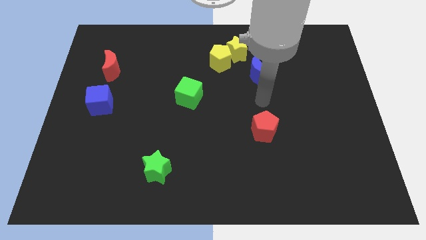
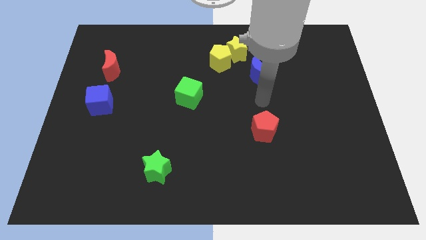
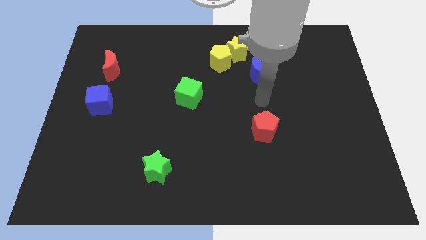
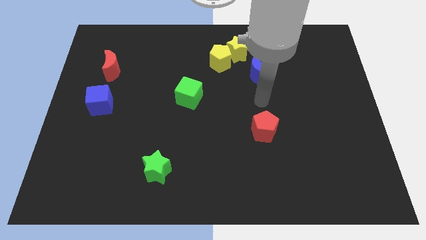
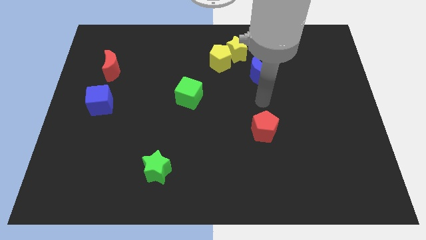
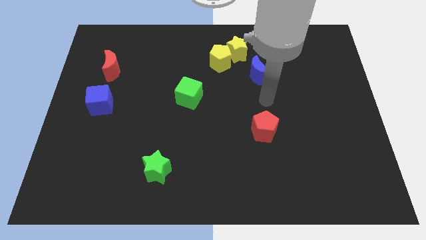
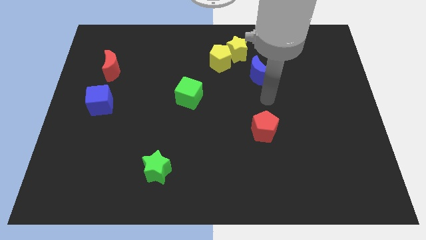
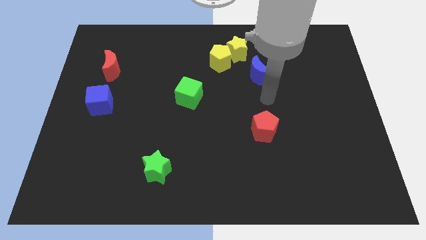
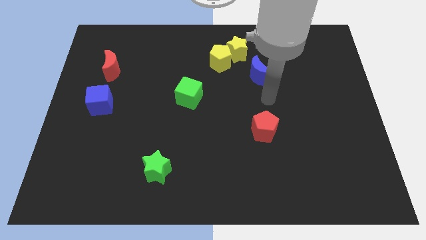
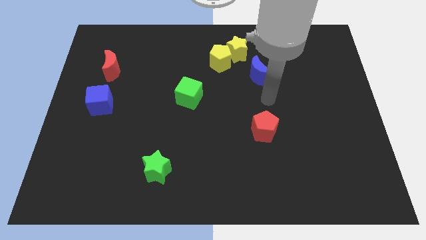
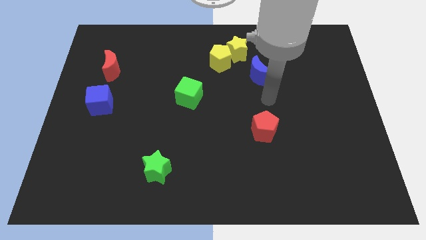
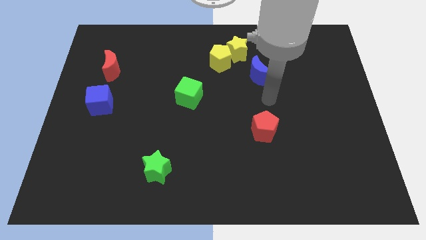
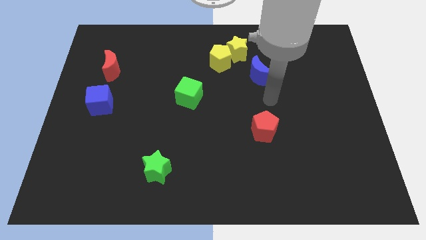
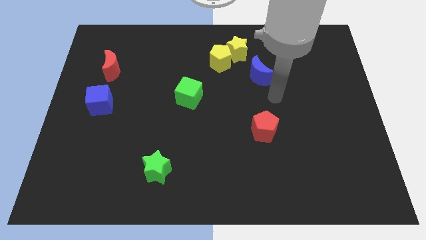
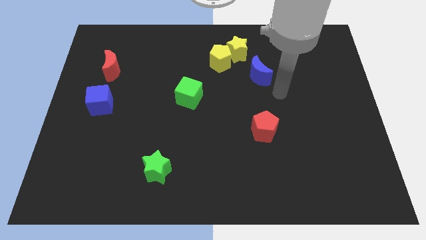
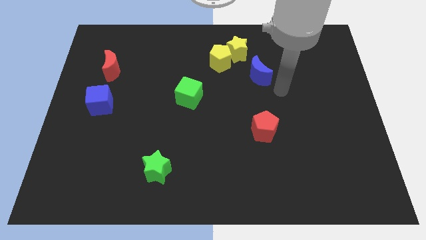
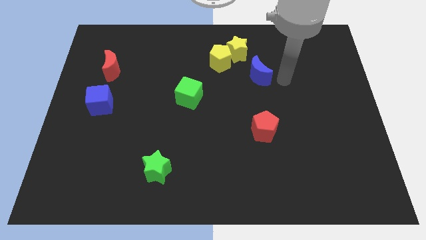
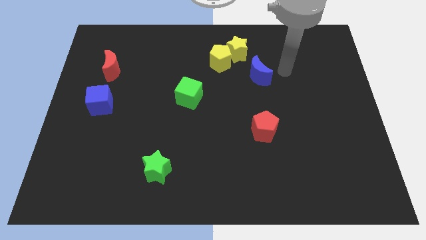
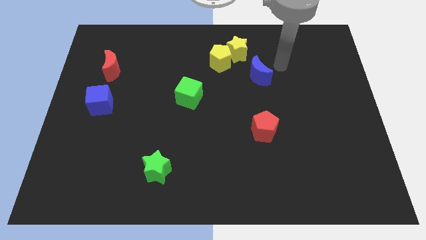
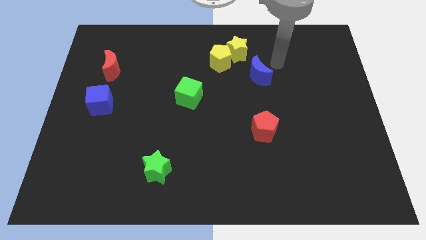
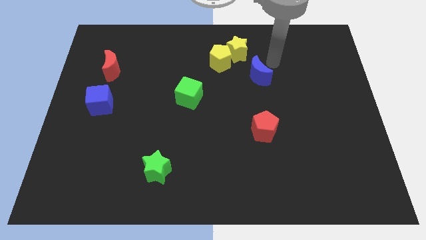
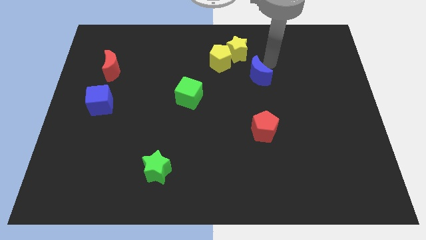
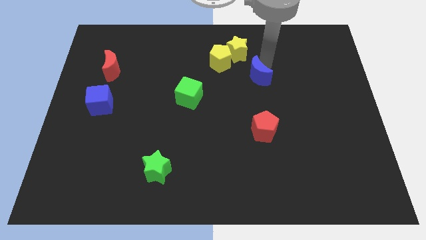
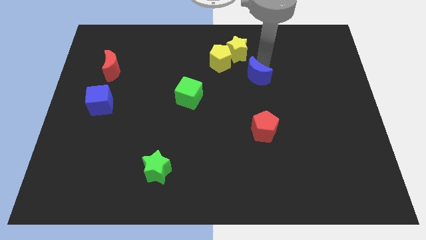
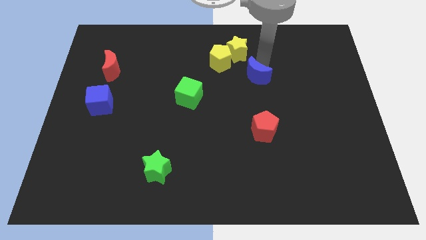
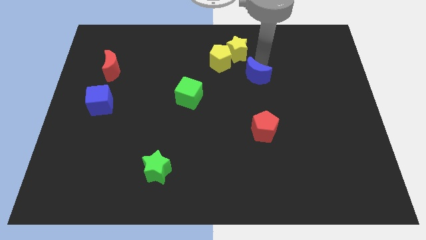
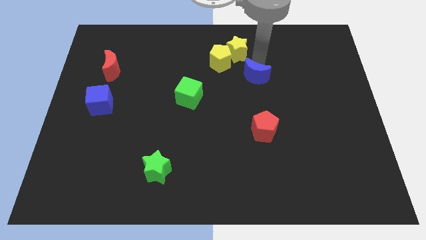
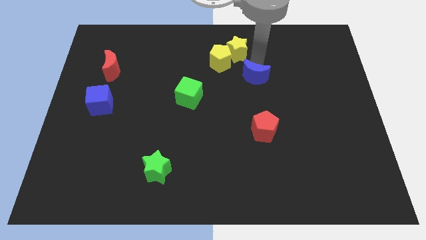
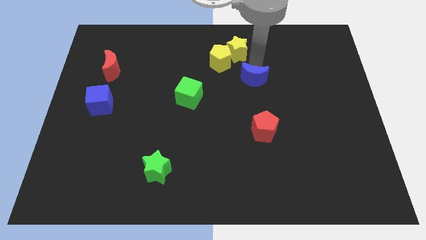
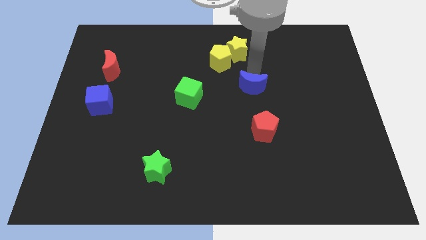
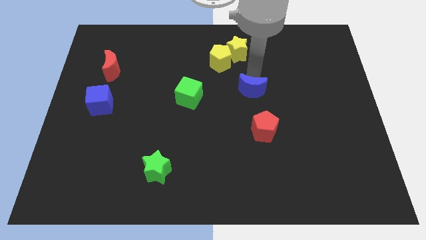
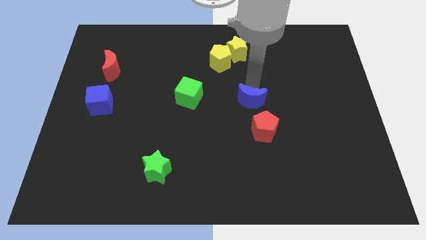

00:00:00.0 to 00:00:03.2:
place the blue moon in between the yellow pentagon and red pentagon

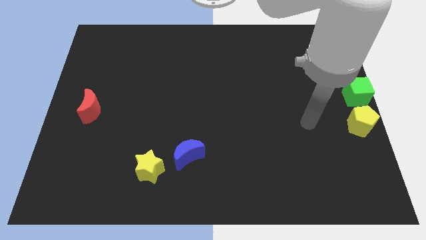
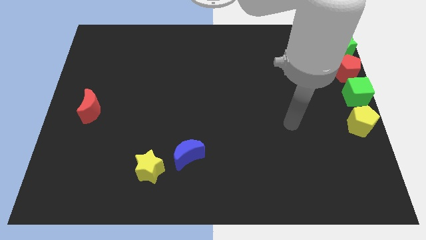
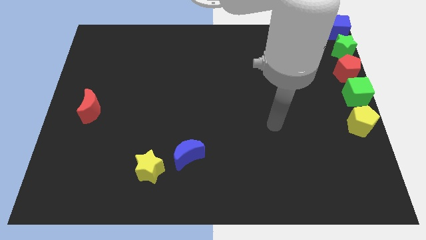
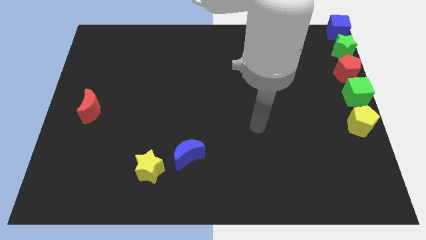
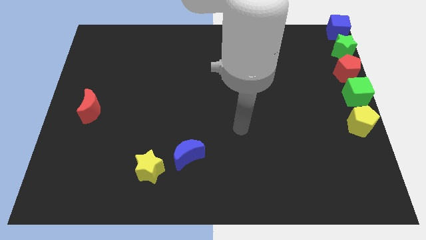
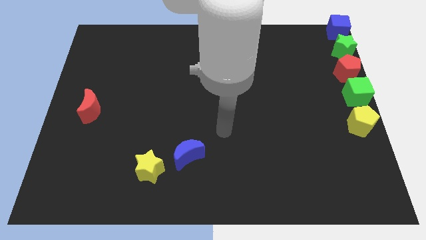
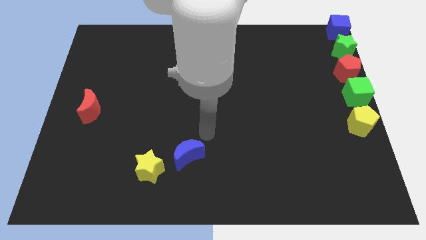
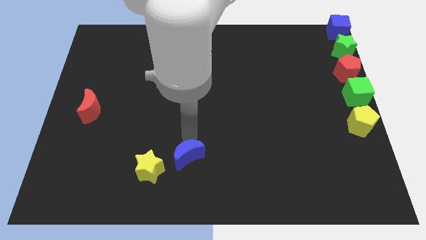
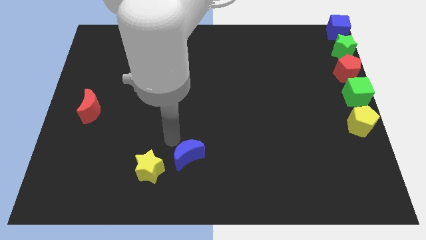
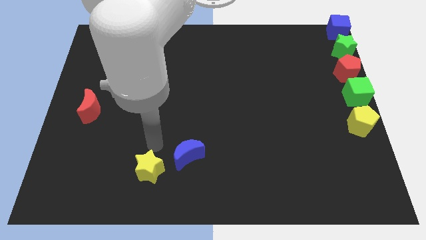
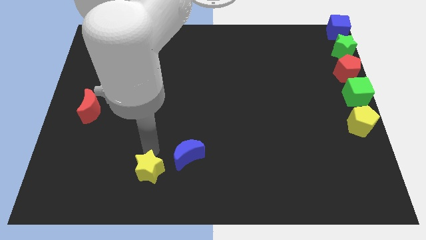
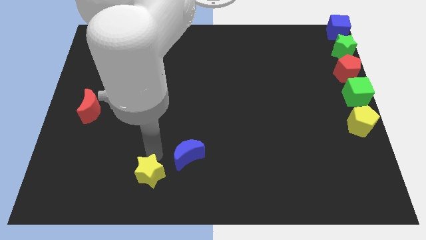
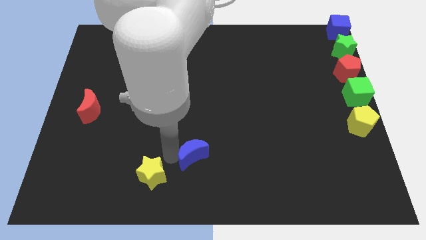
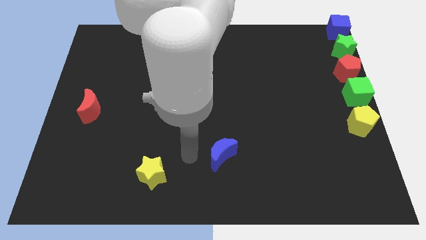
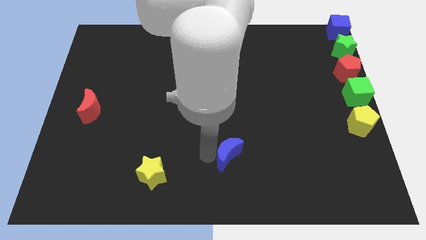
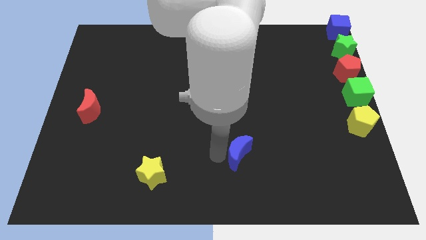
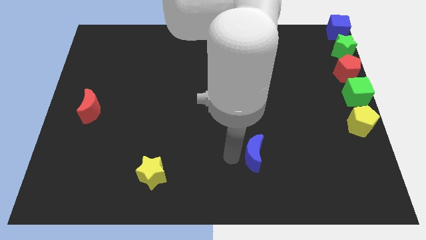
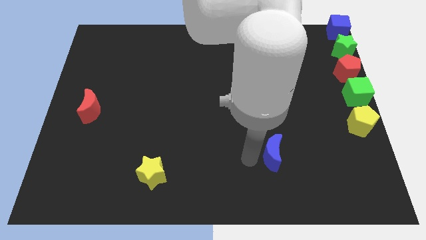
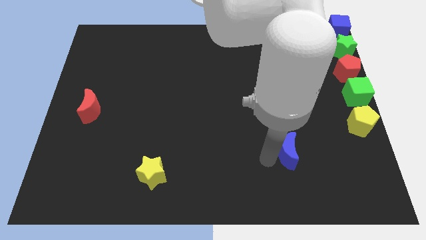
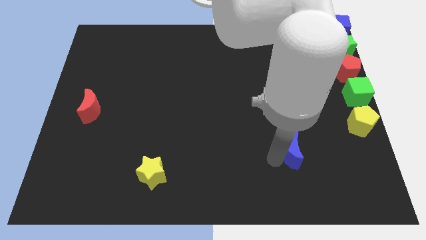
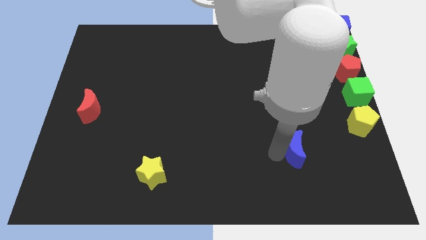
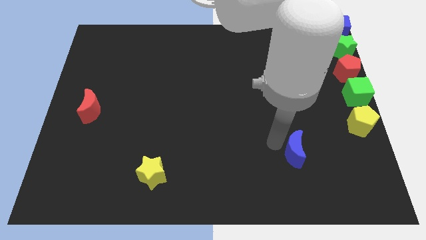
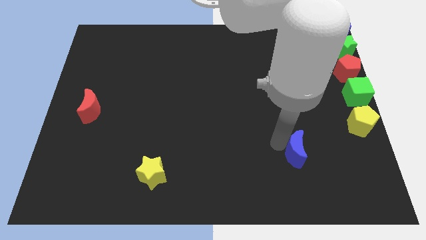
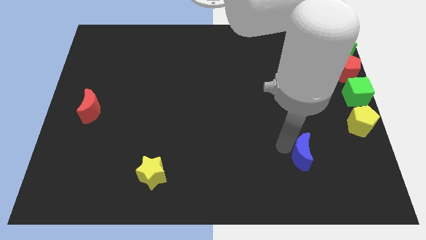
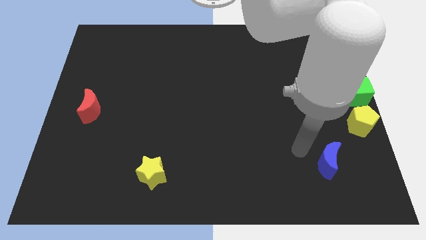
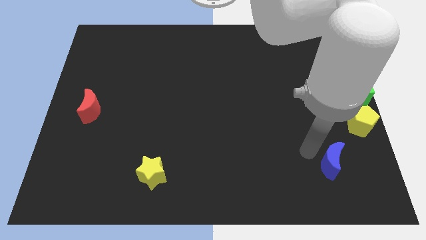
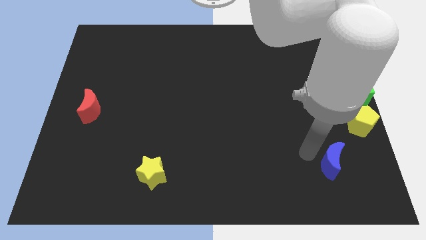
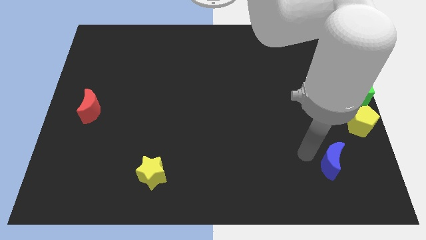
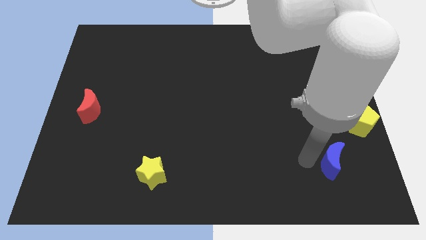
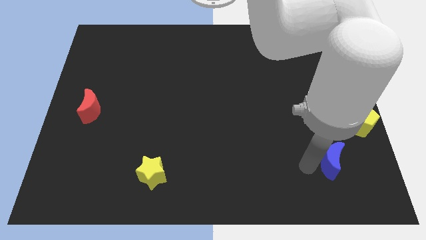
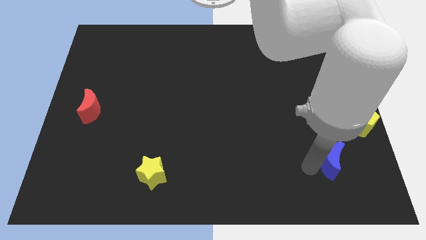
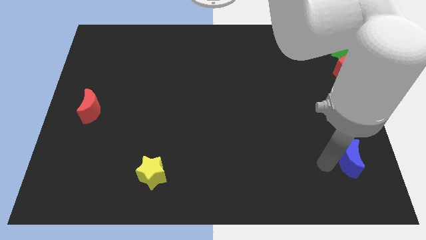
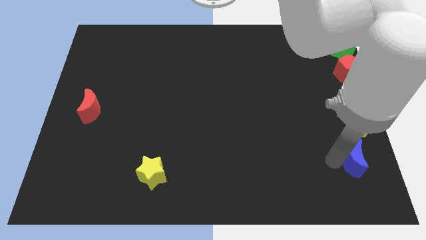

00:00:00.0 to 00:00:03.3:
push the blue moon towards the right side of the board

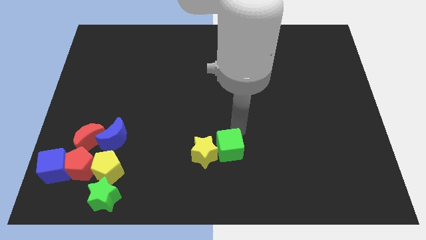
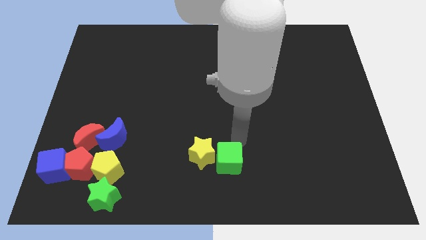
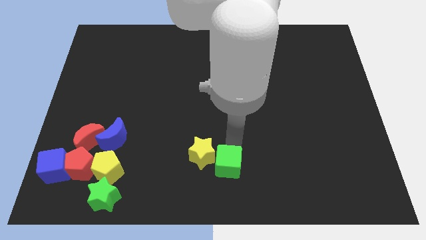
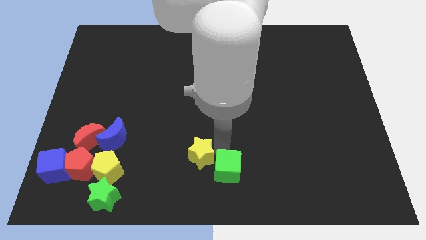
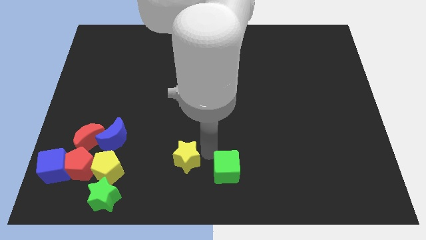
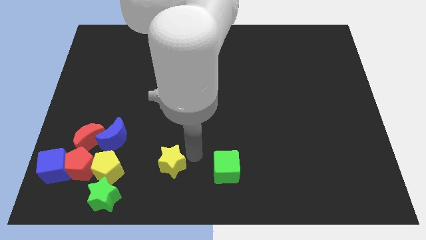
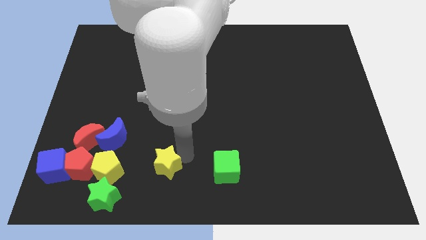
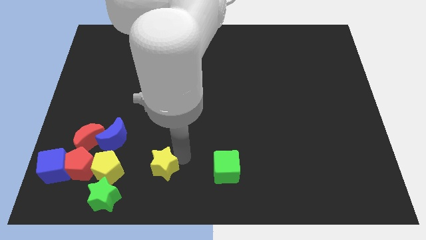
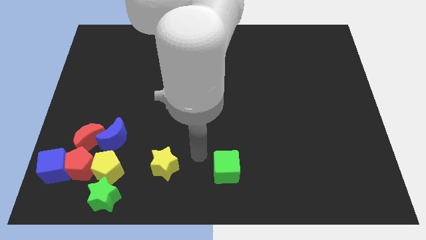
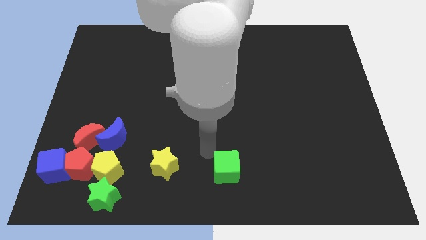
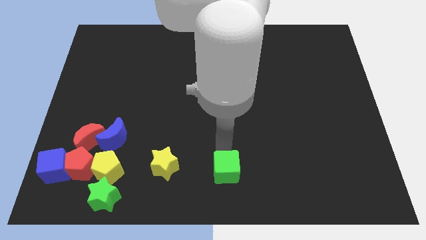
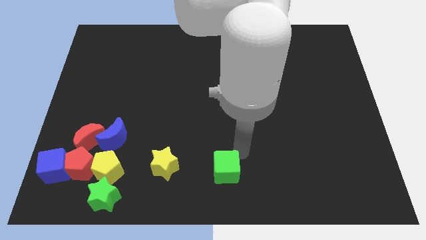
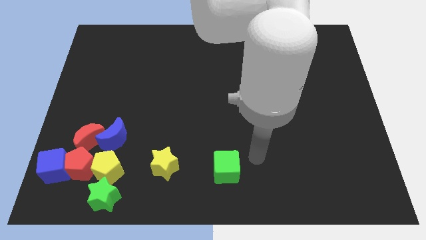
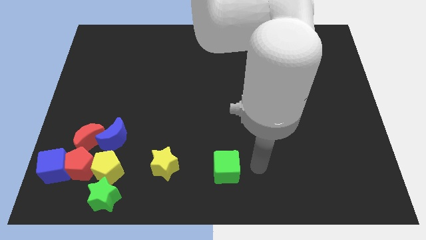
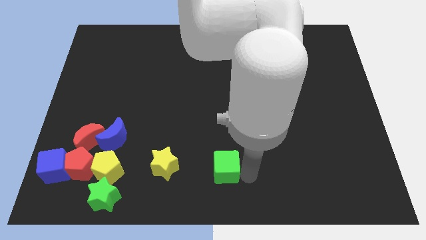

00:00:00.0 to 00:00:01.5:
separate yellow star and green cube from each other

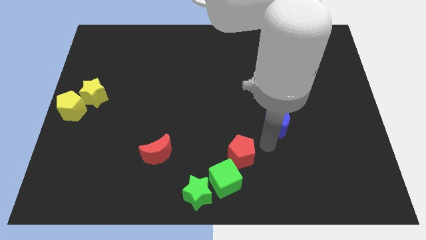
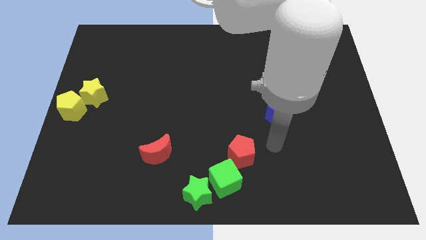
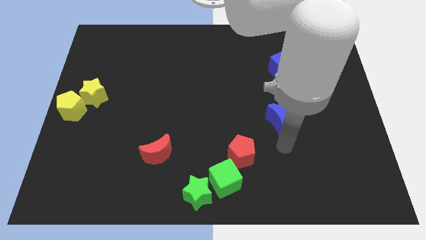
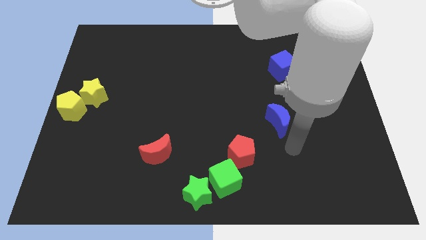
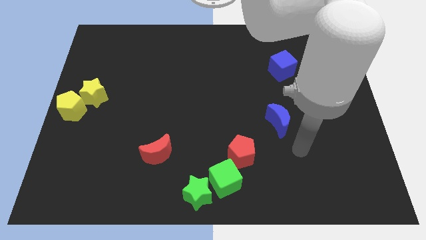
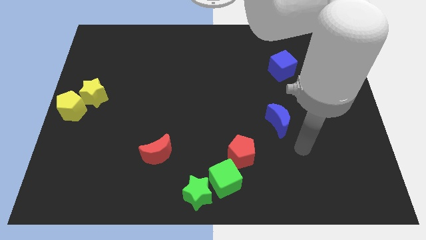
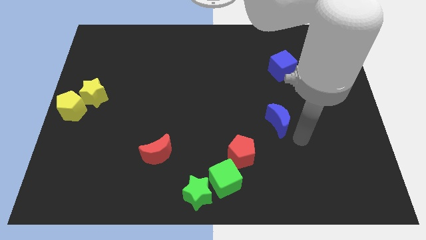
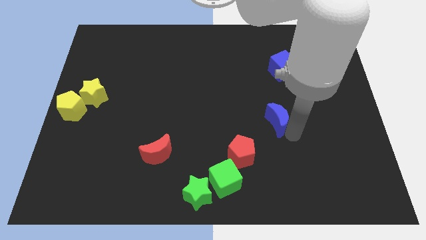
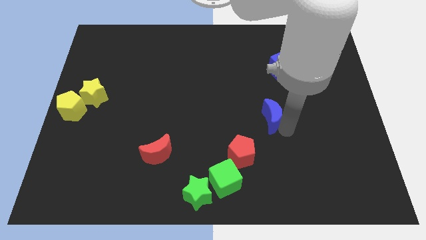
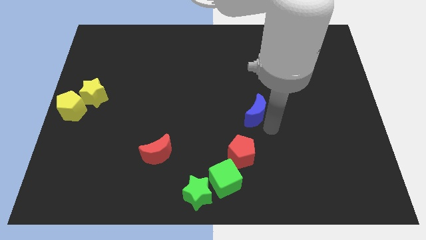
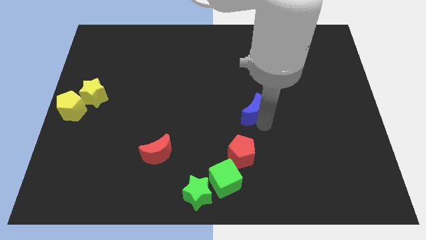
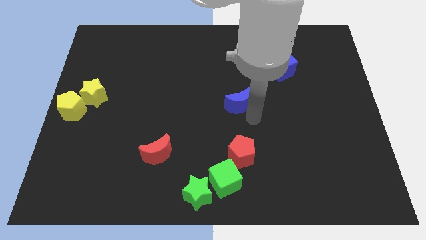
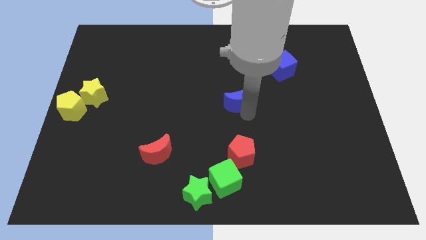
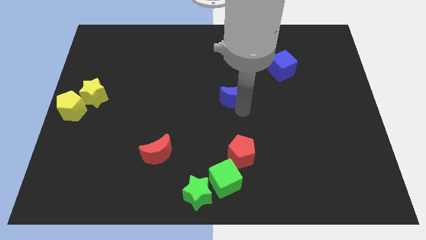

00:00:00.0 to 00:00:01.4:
put the blue crescent vertically above the red pentagon
